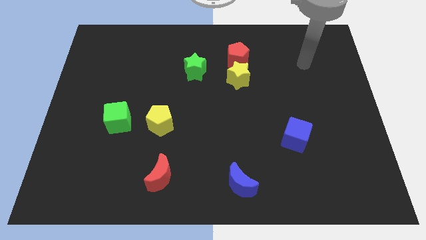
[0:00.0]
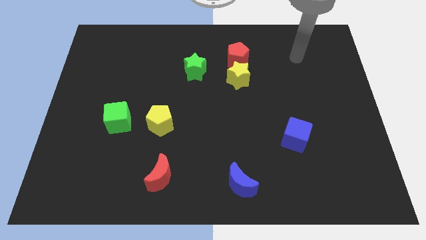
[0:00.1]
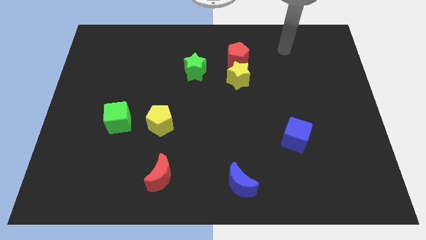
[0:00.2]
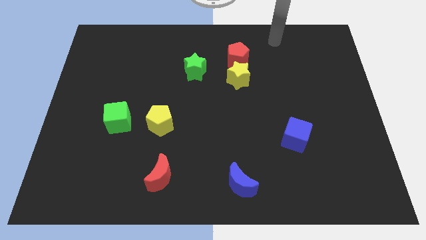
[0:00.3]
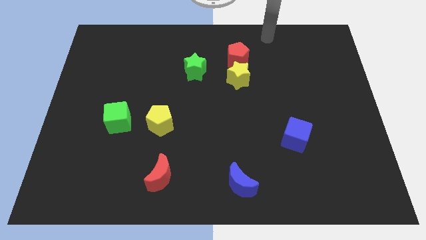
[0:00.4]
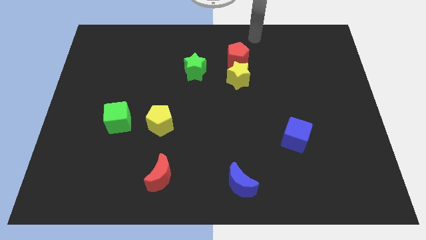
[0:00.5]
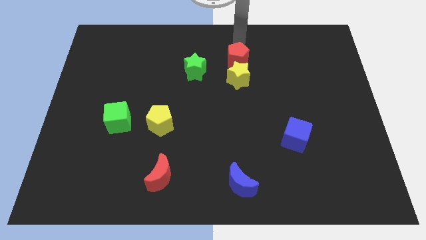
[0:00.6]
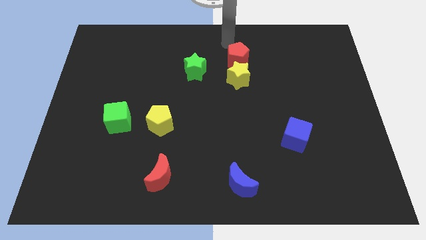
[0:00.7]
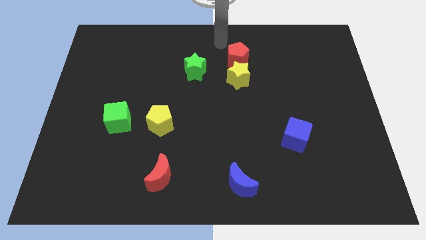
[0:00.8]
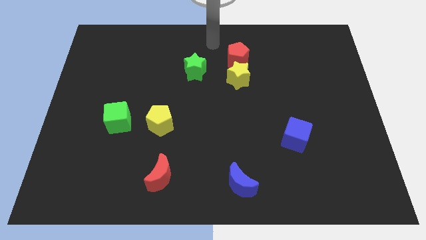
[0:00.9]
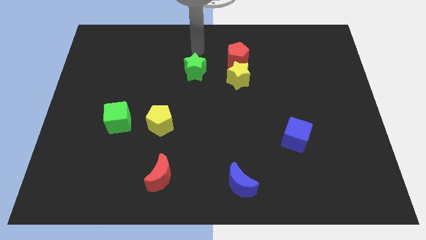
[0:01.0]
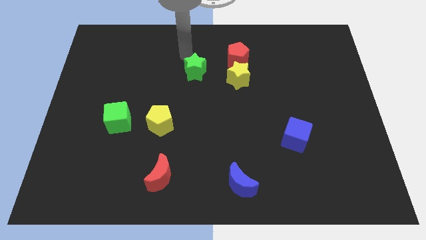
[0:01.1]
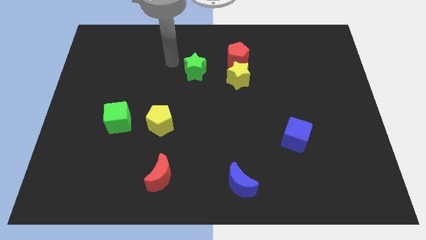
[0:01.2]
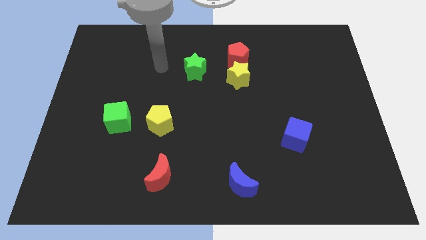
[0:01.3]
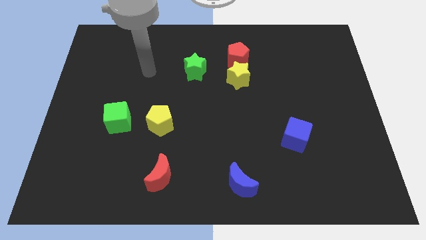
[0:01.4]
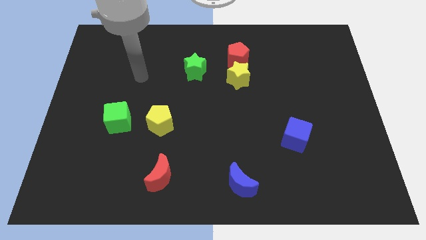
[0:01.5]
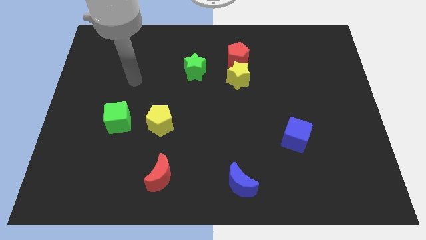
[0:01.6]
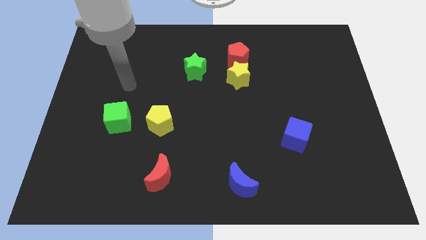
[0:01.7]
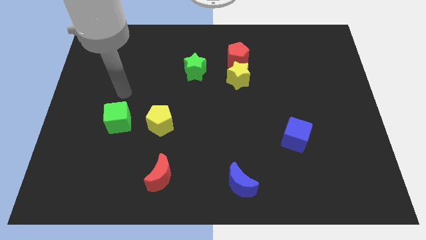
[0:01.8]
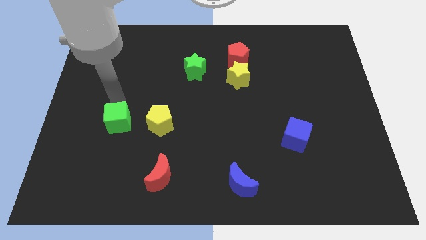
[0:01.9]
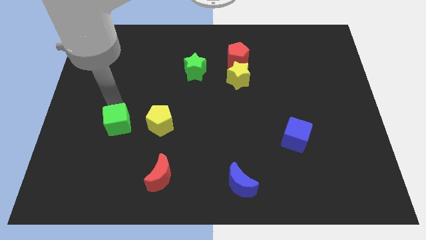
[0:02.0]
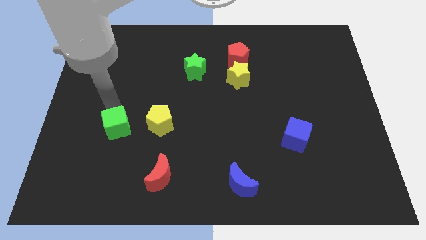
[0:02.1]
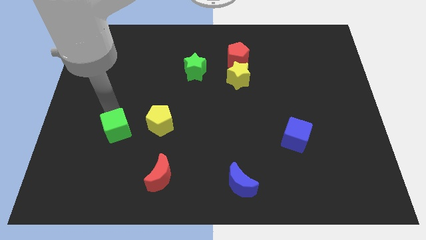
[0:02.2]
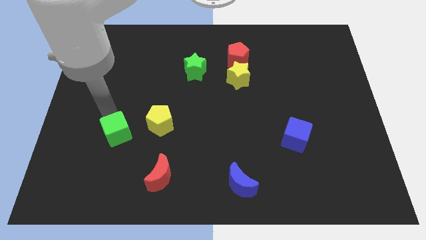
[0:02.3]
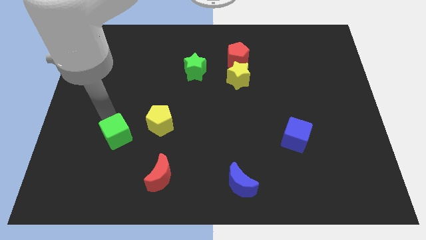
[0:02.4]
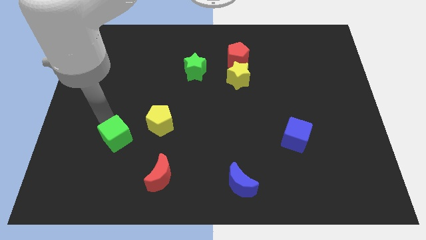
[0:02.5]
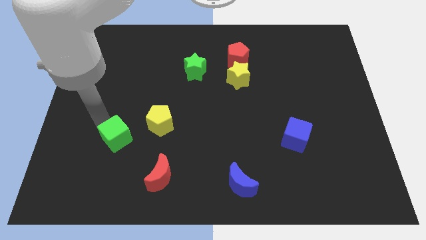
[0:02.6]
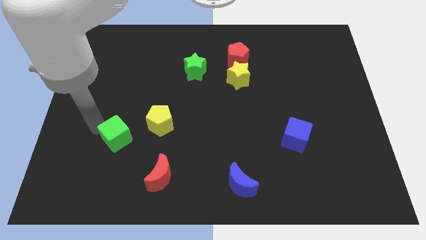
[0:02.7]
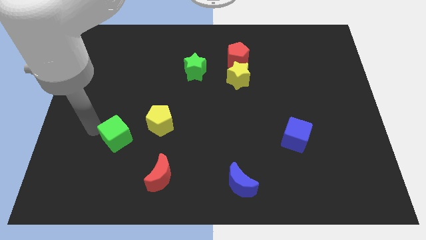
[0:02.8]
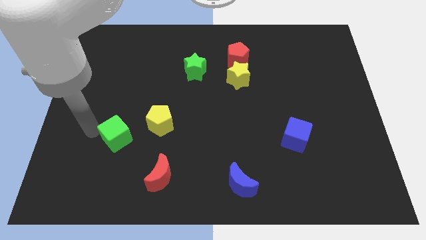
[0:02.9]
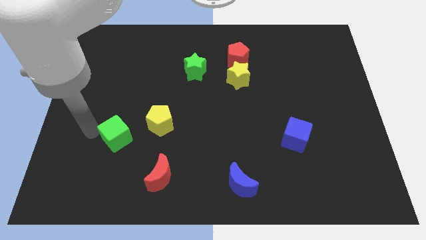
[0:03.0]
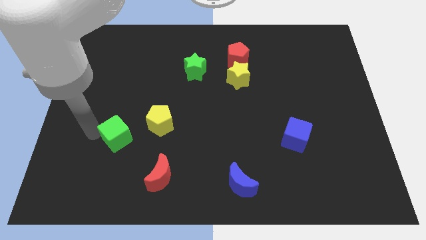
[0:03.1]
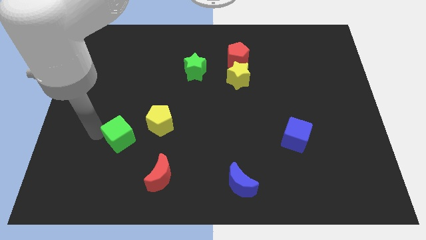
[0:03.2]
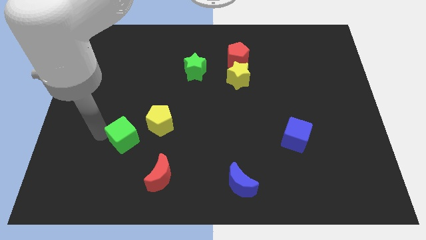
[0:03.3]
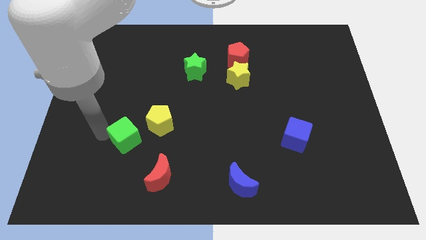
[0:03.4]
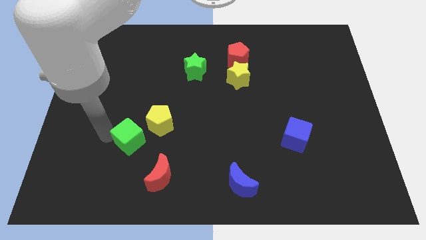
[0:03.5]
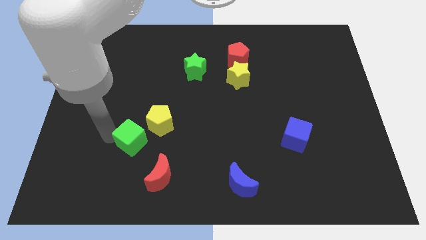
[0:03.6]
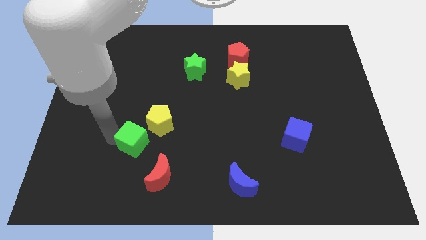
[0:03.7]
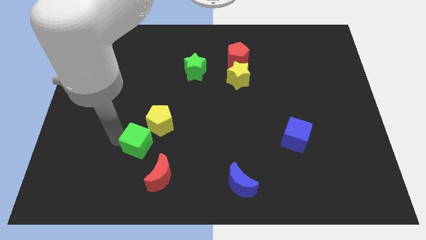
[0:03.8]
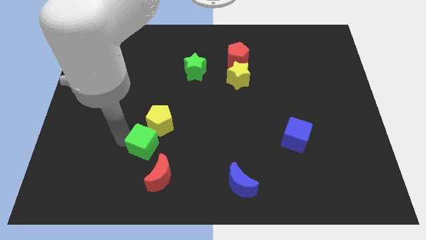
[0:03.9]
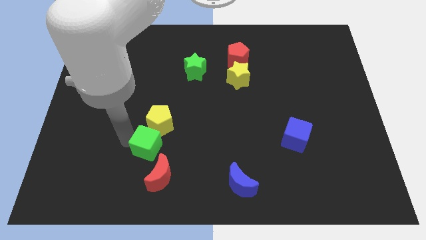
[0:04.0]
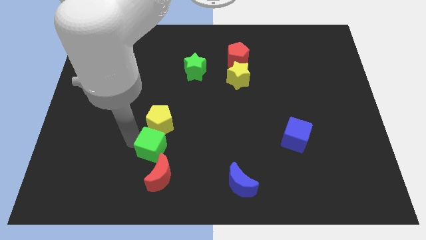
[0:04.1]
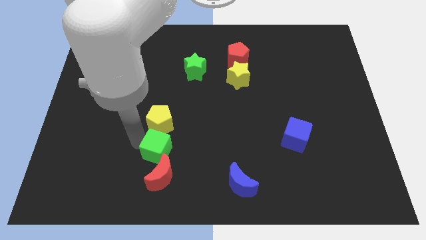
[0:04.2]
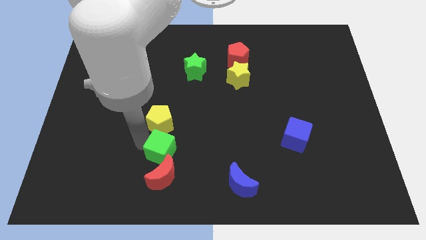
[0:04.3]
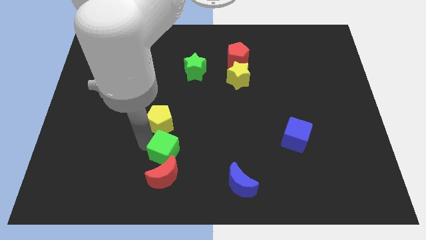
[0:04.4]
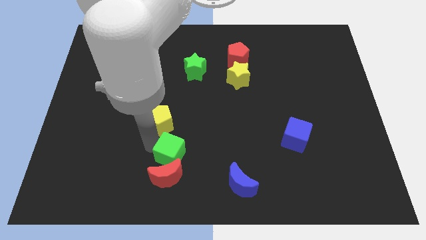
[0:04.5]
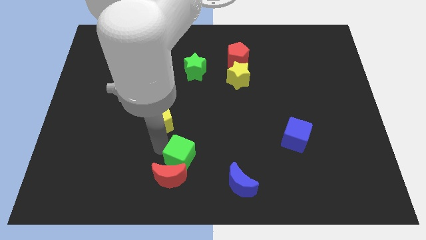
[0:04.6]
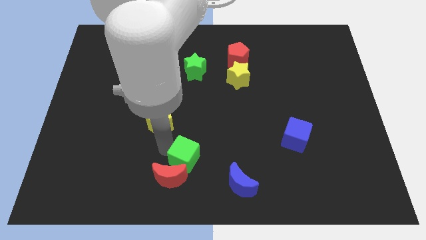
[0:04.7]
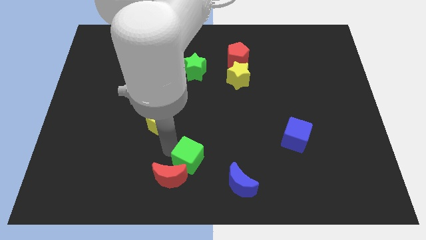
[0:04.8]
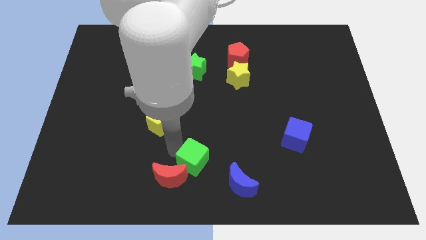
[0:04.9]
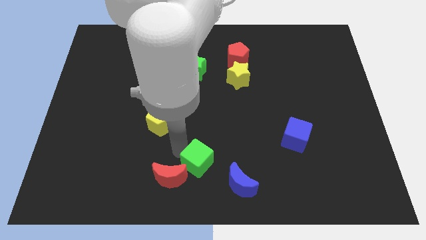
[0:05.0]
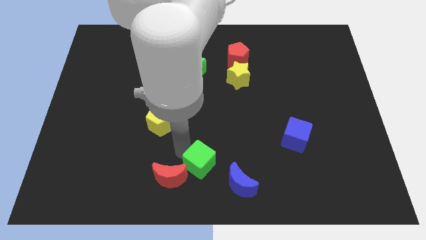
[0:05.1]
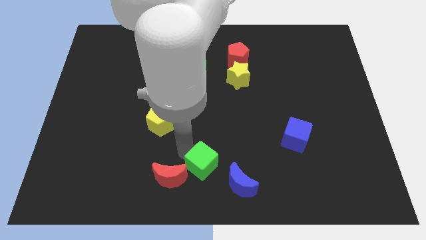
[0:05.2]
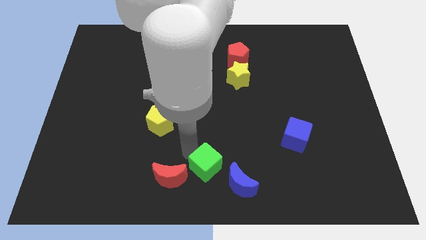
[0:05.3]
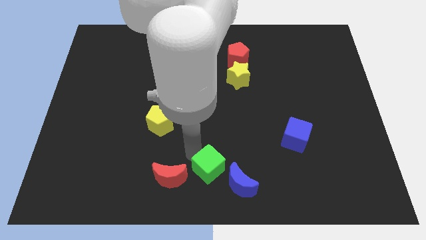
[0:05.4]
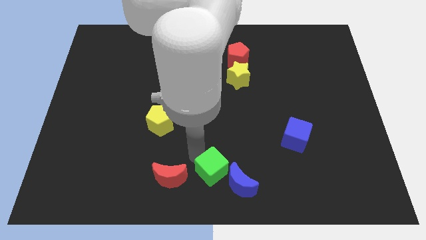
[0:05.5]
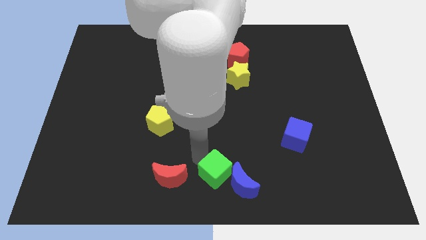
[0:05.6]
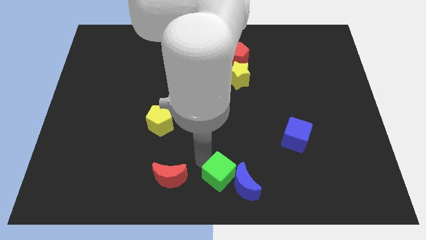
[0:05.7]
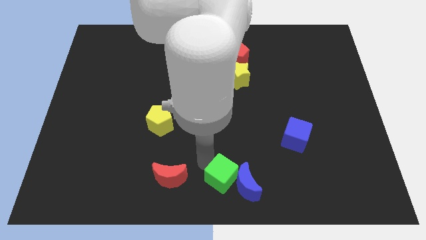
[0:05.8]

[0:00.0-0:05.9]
put the green cube close to the blue moon

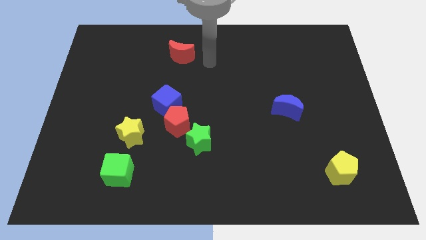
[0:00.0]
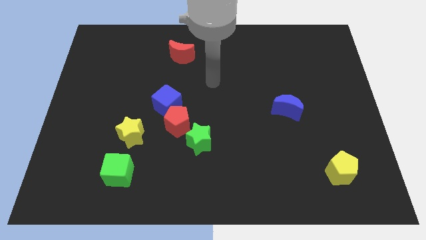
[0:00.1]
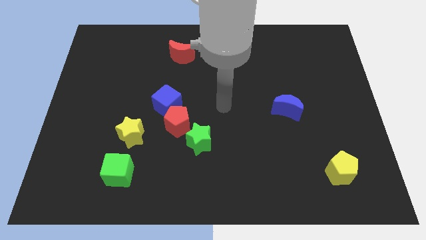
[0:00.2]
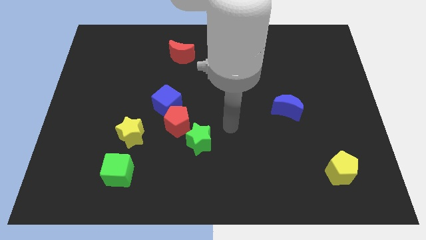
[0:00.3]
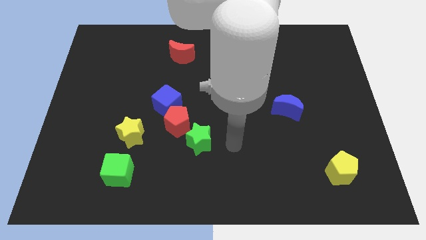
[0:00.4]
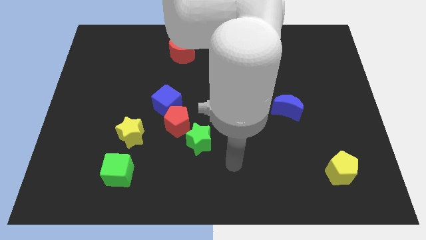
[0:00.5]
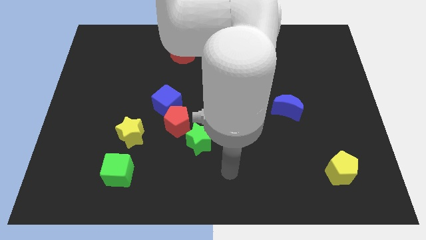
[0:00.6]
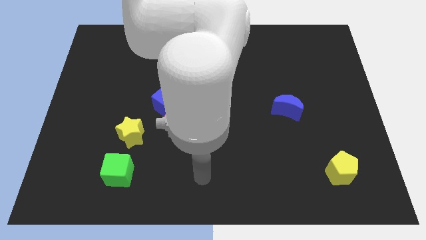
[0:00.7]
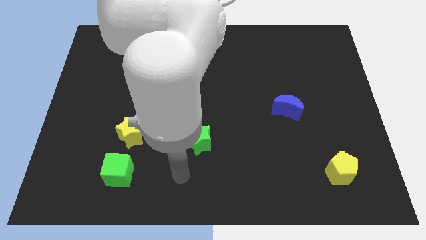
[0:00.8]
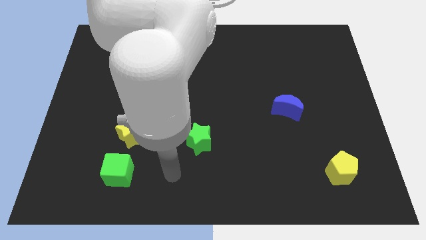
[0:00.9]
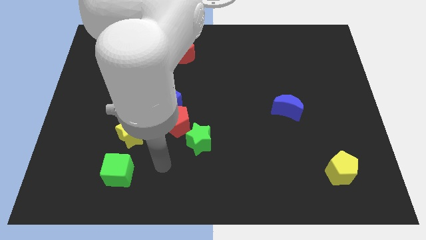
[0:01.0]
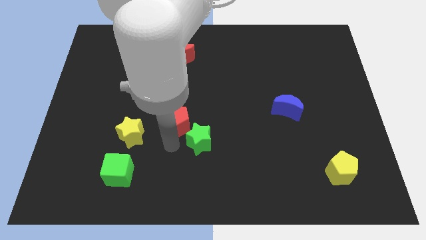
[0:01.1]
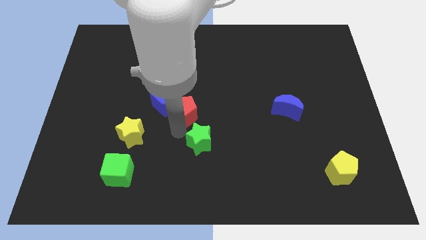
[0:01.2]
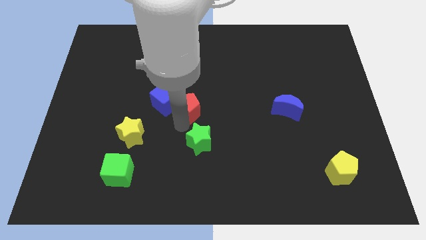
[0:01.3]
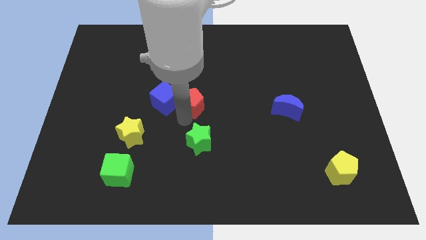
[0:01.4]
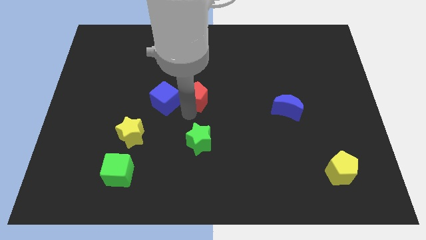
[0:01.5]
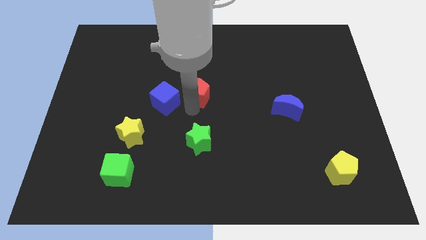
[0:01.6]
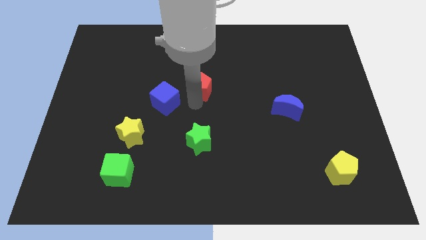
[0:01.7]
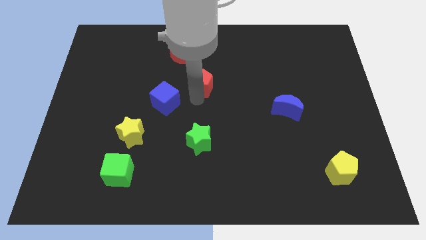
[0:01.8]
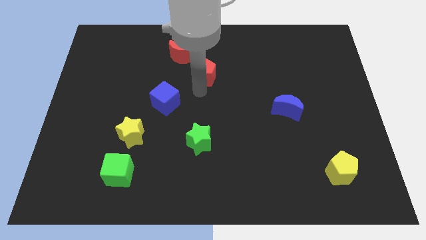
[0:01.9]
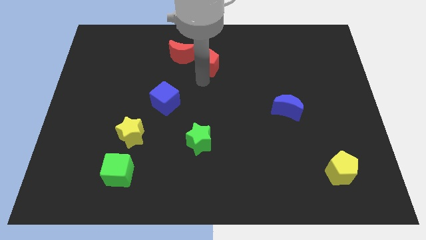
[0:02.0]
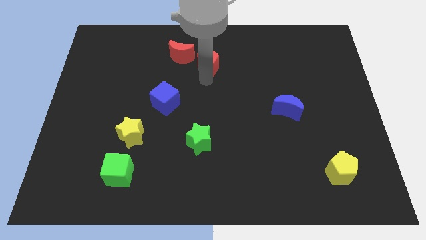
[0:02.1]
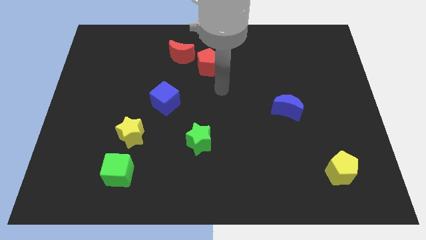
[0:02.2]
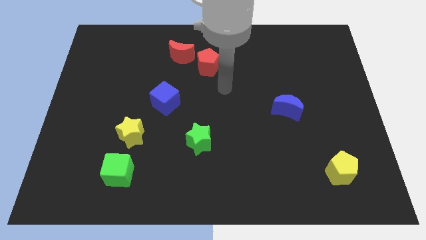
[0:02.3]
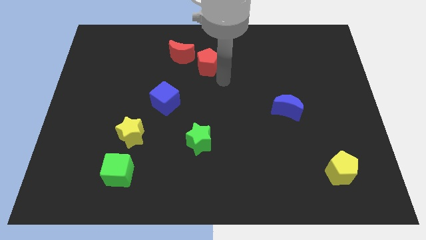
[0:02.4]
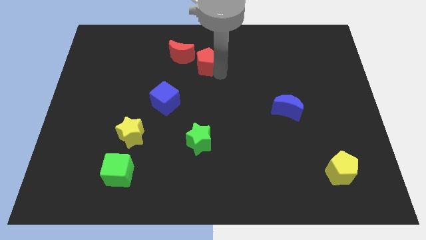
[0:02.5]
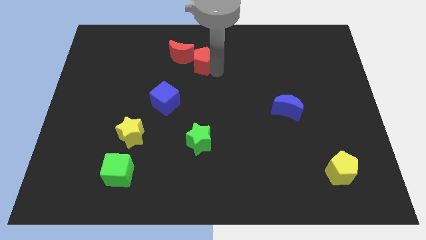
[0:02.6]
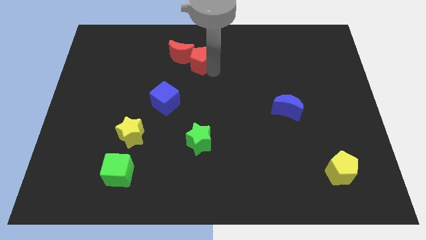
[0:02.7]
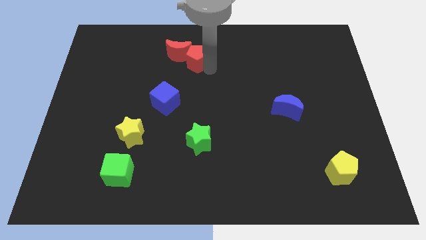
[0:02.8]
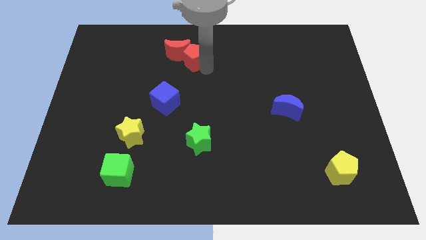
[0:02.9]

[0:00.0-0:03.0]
slide the red pentagon towards the red moon

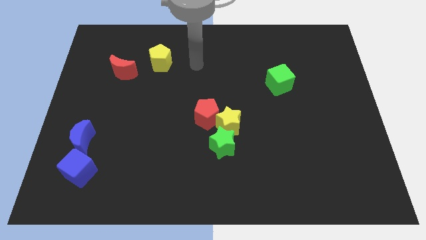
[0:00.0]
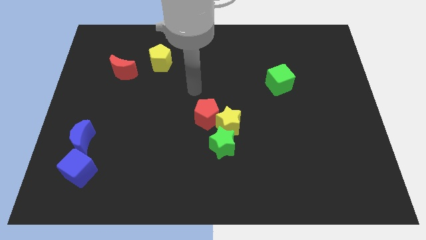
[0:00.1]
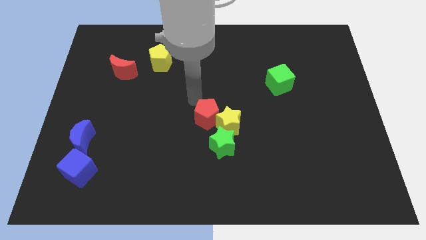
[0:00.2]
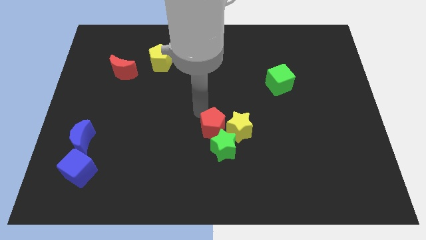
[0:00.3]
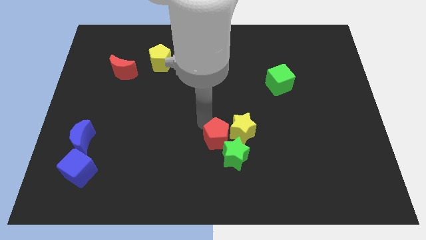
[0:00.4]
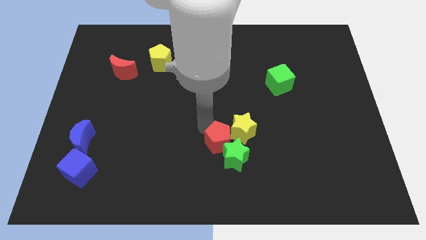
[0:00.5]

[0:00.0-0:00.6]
slide the red pentagon close to the green star
